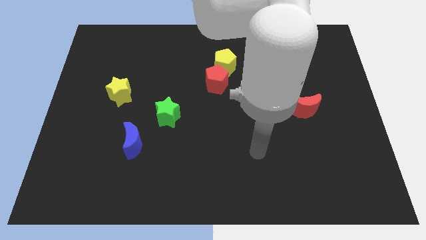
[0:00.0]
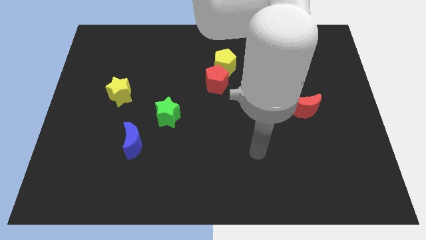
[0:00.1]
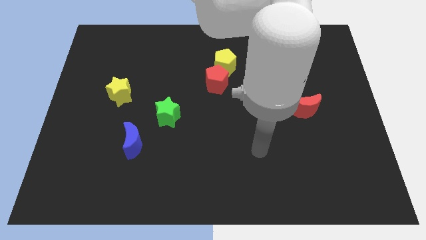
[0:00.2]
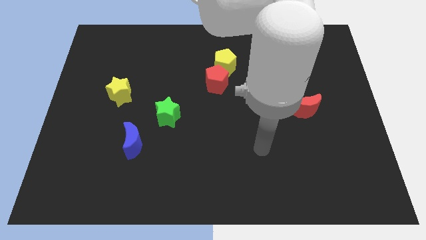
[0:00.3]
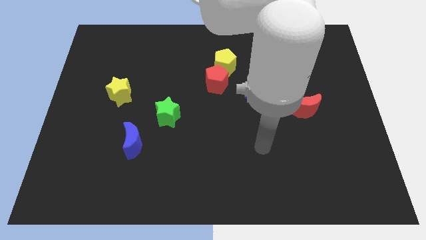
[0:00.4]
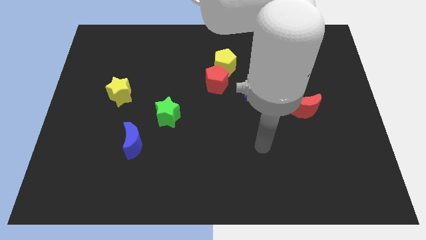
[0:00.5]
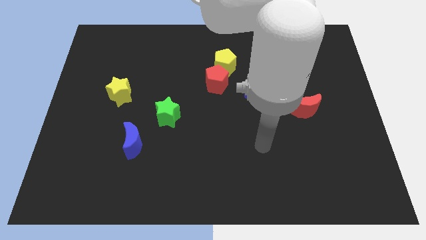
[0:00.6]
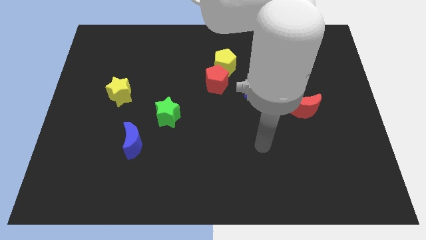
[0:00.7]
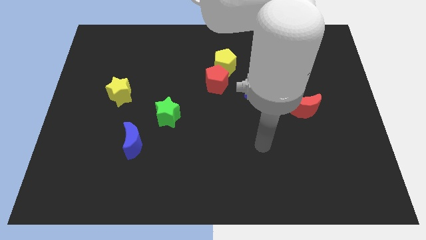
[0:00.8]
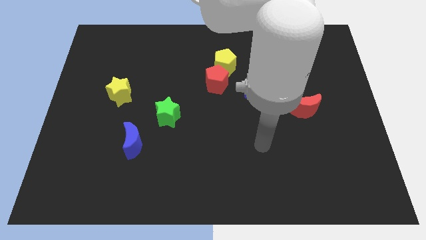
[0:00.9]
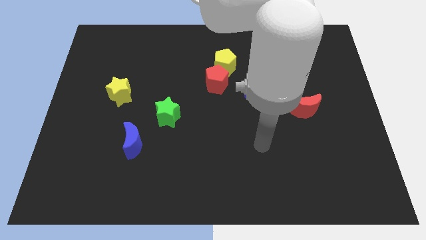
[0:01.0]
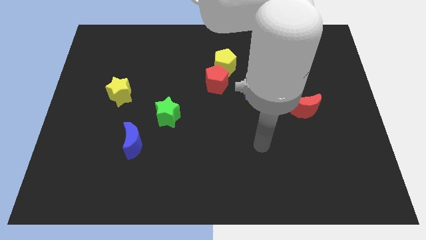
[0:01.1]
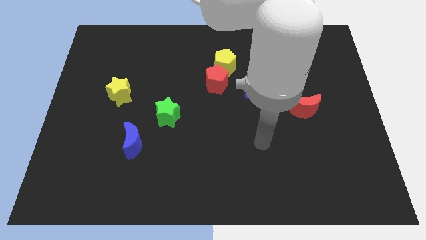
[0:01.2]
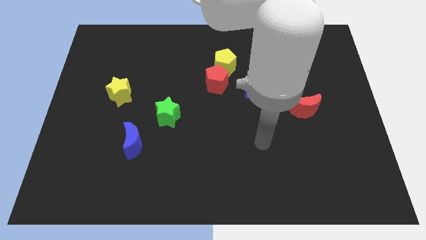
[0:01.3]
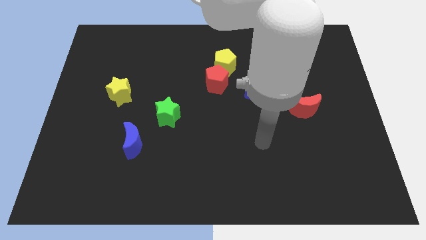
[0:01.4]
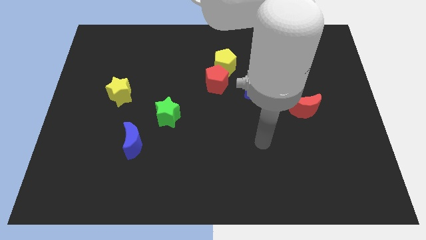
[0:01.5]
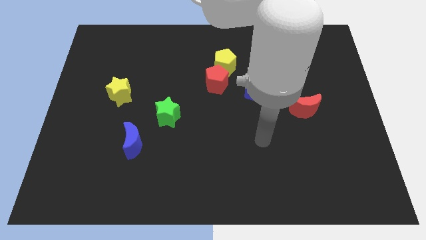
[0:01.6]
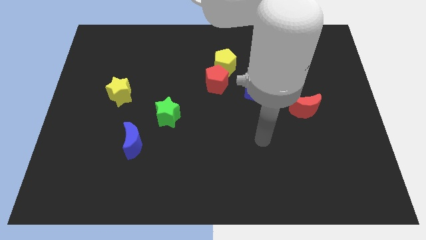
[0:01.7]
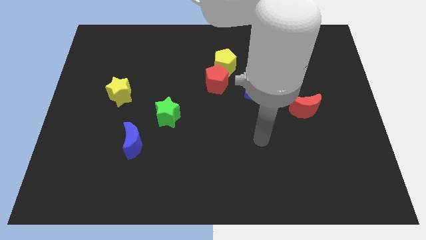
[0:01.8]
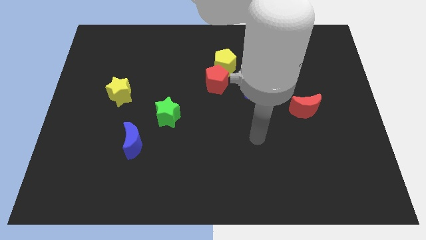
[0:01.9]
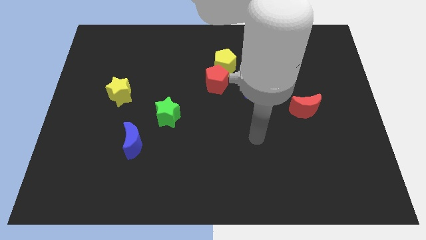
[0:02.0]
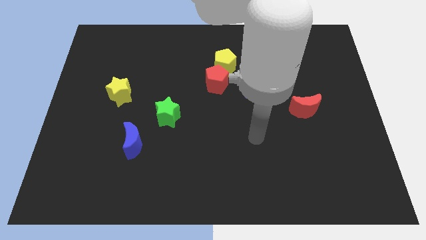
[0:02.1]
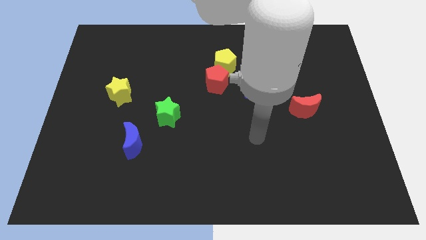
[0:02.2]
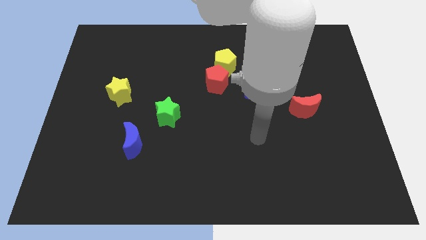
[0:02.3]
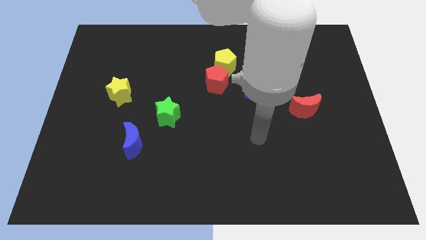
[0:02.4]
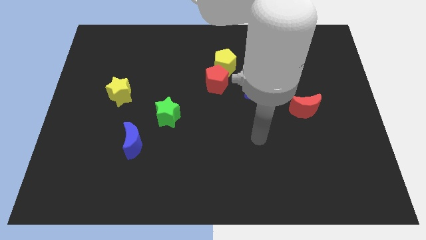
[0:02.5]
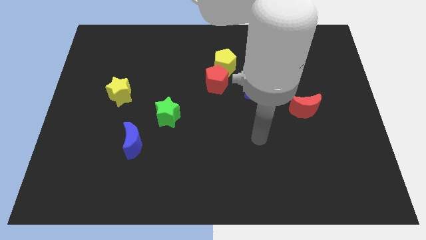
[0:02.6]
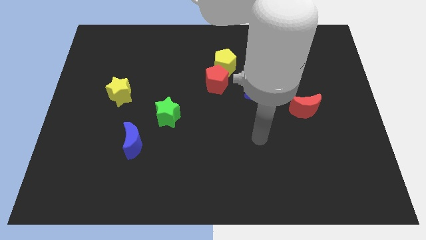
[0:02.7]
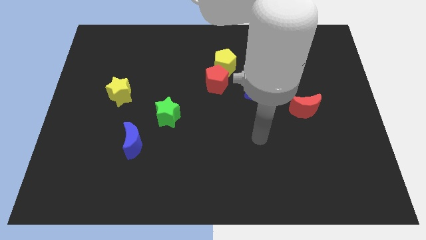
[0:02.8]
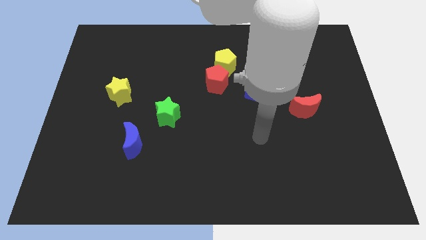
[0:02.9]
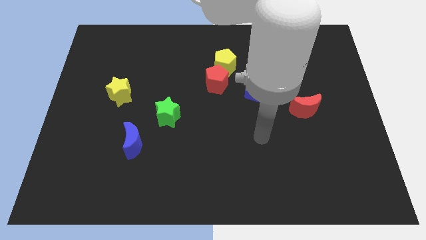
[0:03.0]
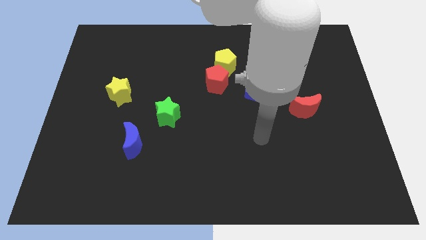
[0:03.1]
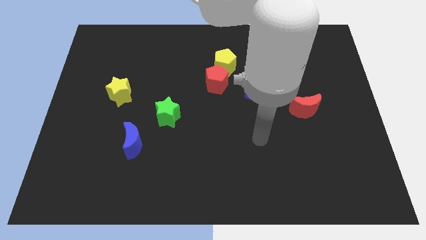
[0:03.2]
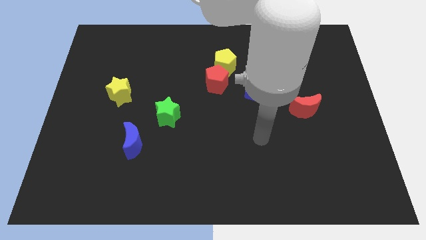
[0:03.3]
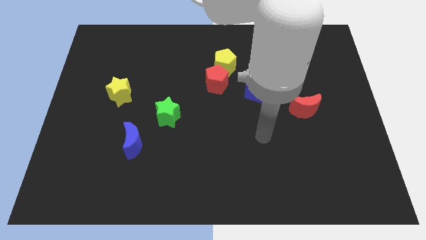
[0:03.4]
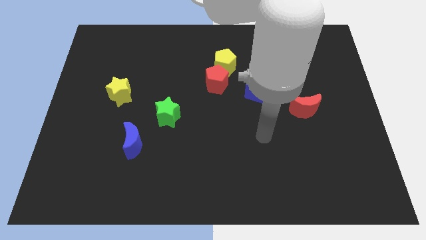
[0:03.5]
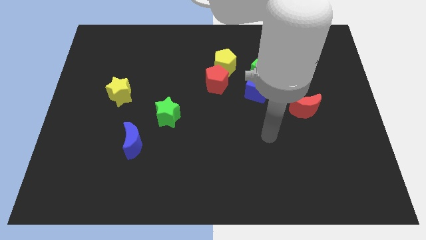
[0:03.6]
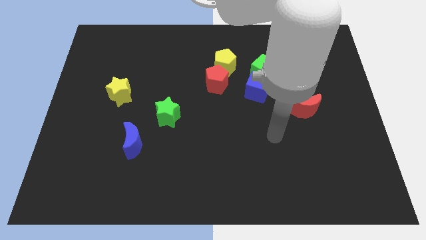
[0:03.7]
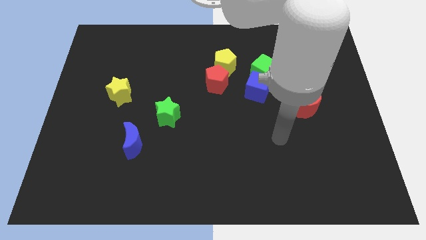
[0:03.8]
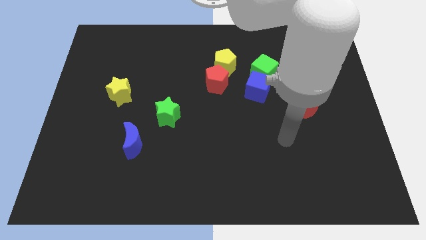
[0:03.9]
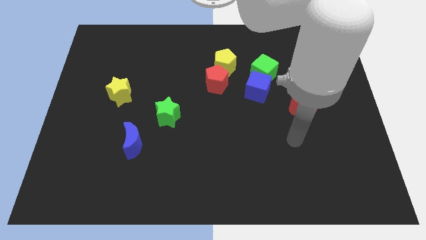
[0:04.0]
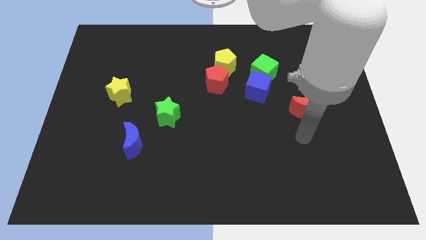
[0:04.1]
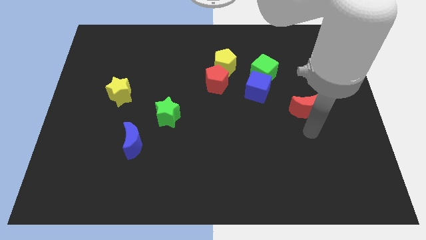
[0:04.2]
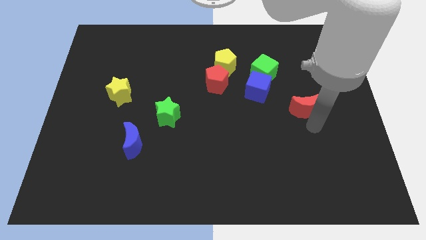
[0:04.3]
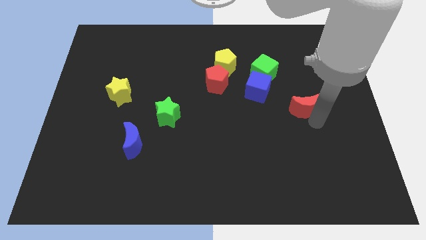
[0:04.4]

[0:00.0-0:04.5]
move the arm towards the red pentagon

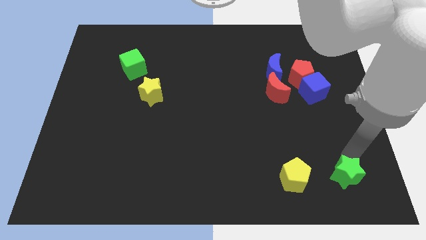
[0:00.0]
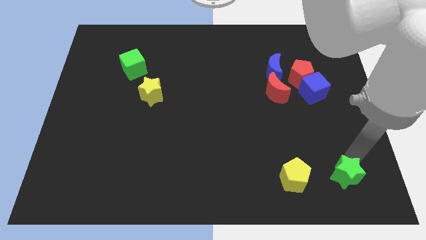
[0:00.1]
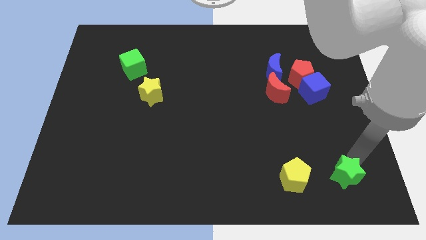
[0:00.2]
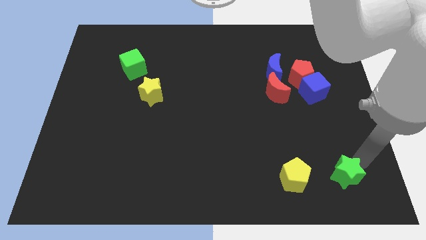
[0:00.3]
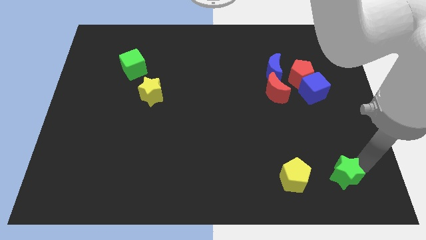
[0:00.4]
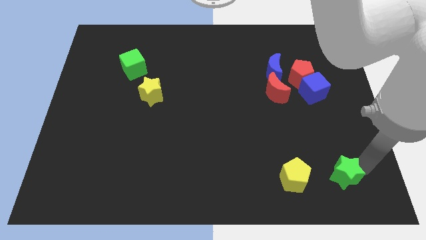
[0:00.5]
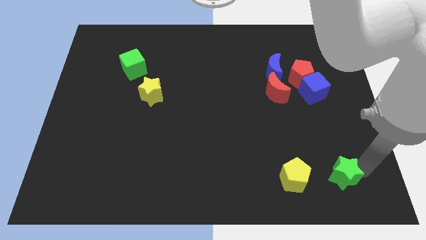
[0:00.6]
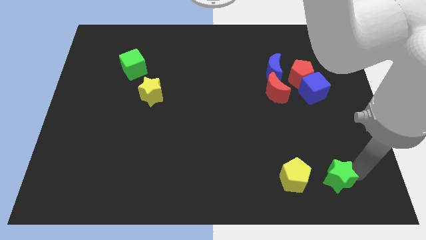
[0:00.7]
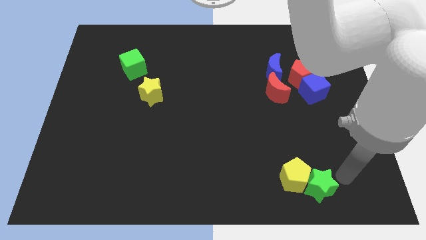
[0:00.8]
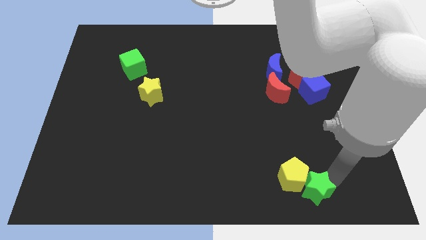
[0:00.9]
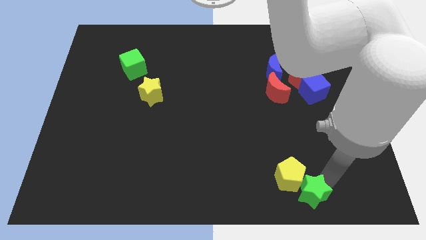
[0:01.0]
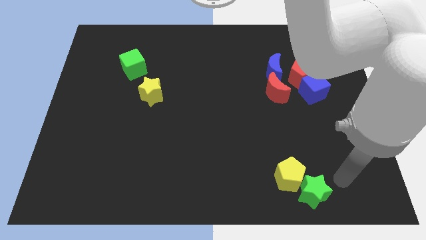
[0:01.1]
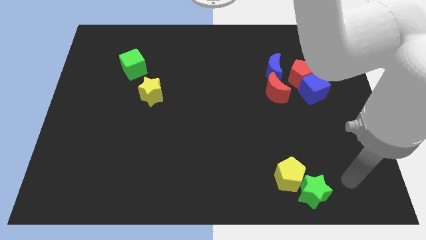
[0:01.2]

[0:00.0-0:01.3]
move the green star right below the yellow pentagon

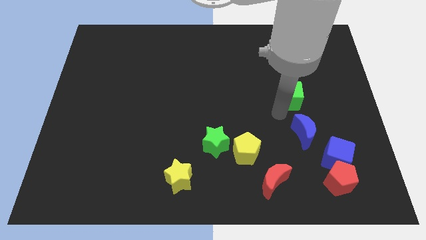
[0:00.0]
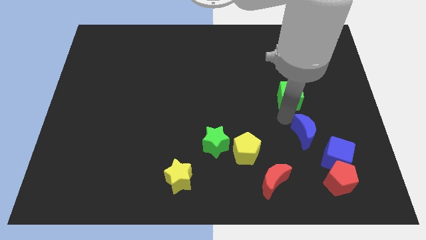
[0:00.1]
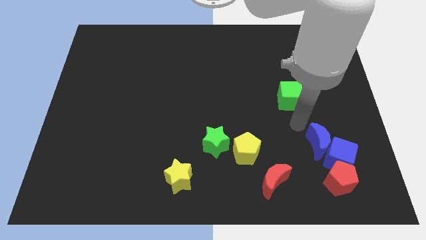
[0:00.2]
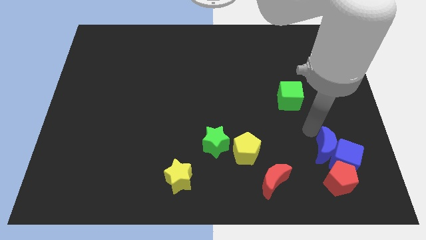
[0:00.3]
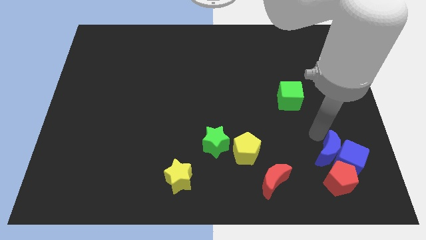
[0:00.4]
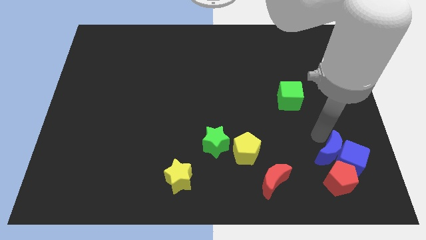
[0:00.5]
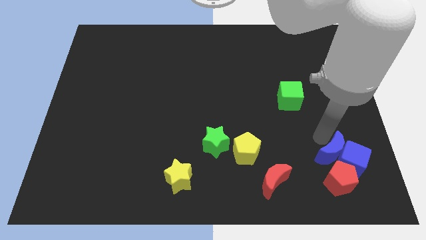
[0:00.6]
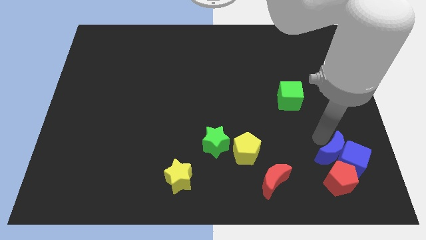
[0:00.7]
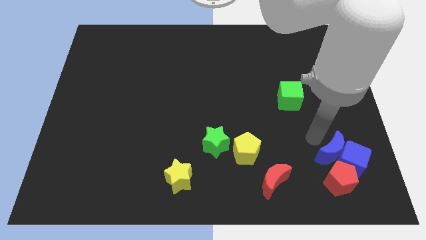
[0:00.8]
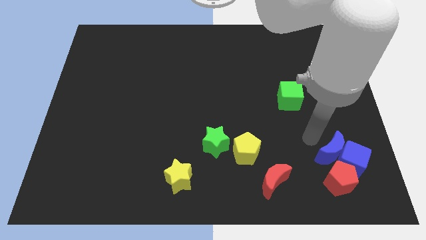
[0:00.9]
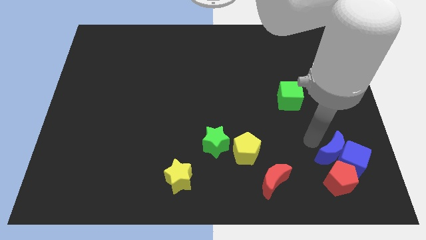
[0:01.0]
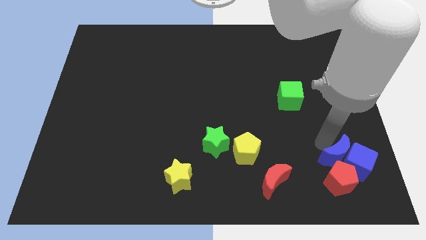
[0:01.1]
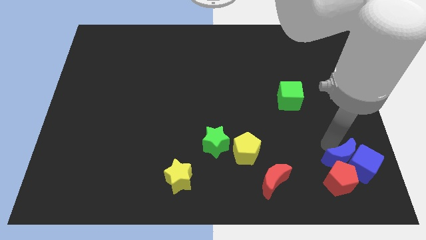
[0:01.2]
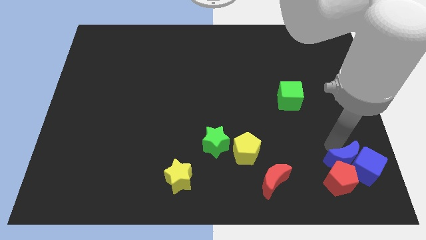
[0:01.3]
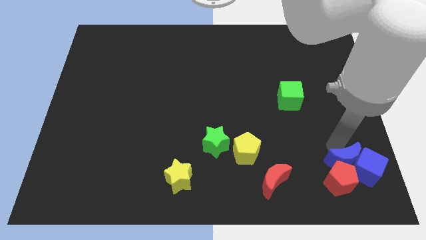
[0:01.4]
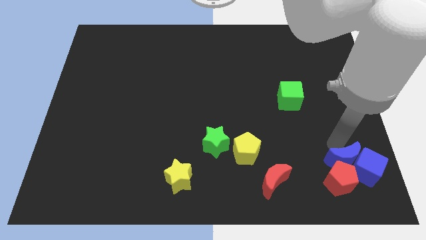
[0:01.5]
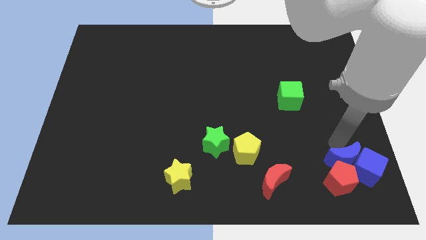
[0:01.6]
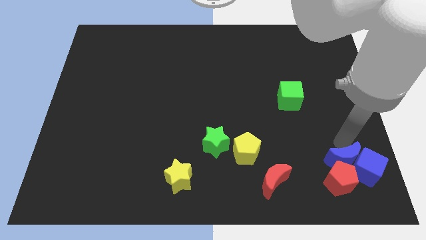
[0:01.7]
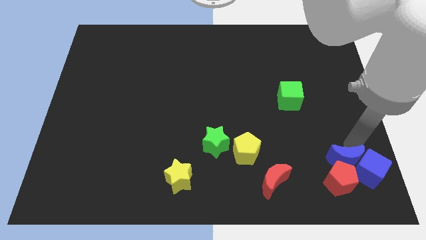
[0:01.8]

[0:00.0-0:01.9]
push the blue crescent into the blue cube

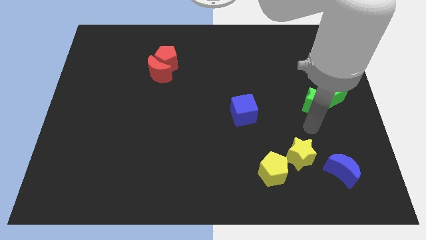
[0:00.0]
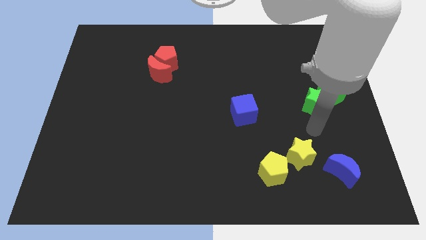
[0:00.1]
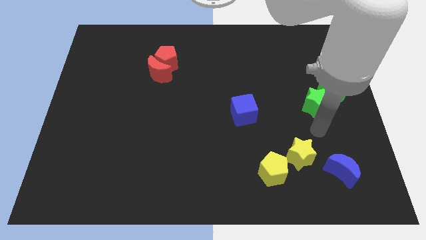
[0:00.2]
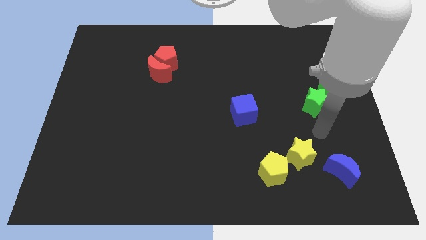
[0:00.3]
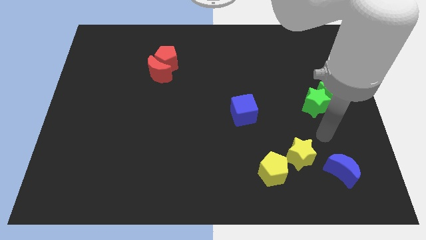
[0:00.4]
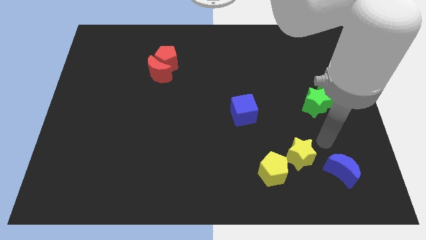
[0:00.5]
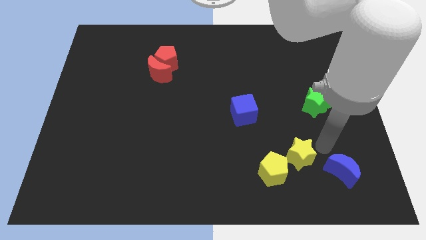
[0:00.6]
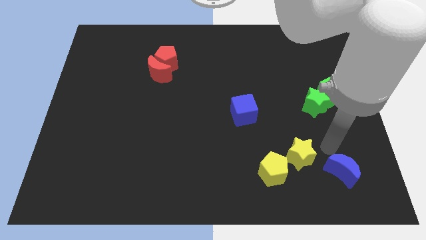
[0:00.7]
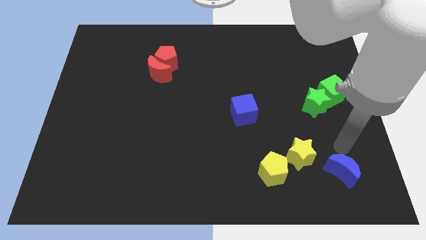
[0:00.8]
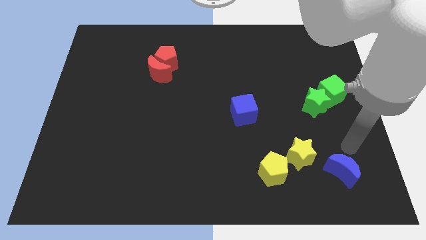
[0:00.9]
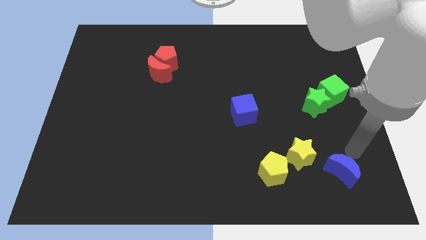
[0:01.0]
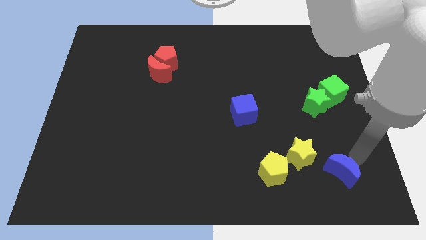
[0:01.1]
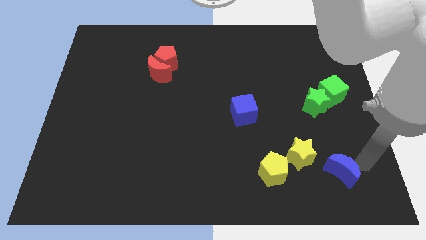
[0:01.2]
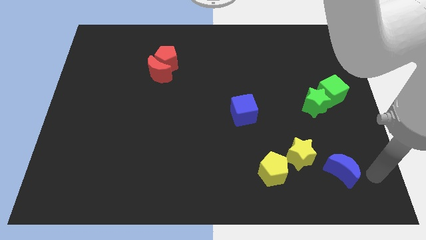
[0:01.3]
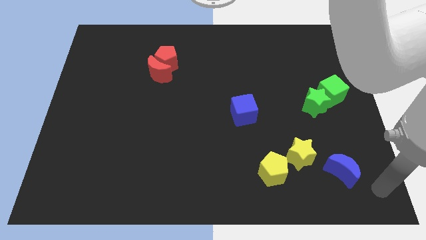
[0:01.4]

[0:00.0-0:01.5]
move your arm towards the right side of the blue crescent
